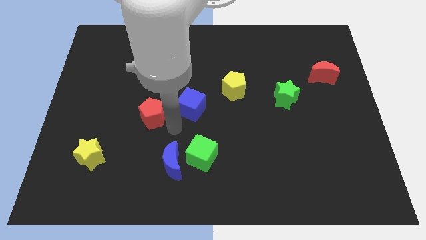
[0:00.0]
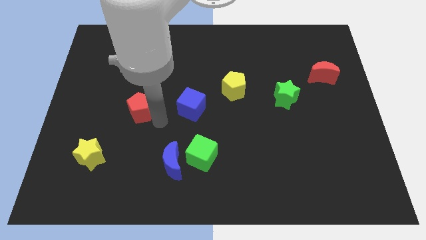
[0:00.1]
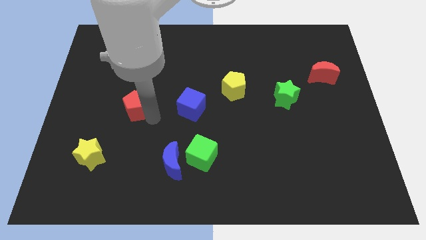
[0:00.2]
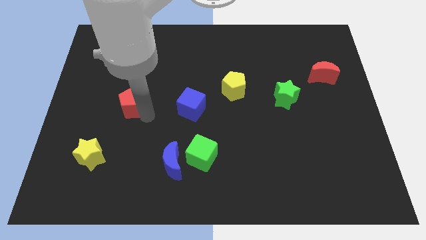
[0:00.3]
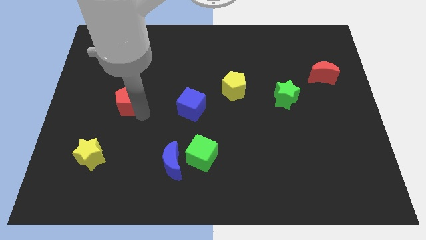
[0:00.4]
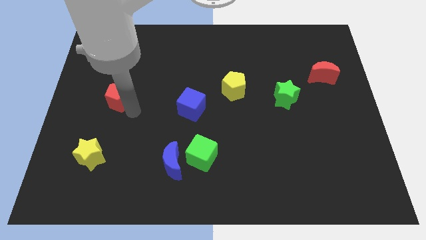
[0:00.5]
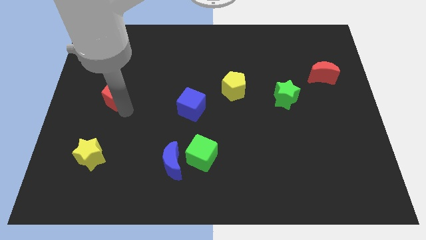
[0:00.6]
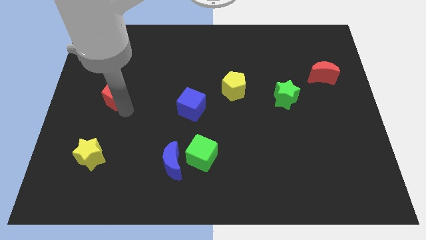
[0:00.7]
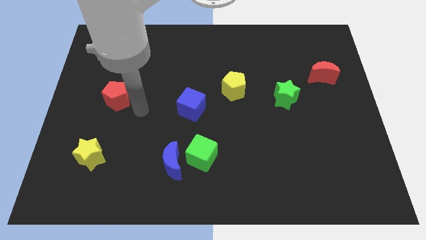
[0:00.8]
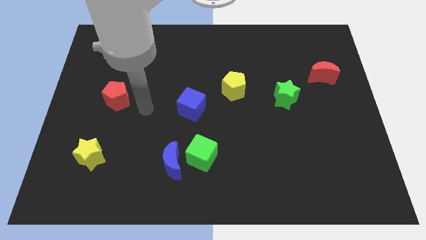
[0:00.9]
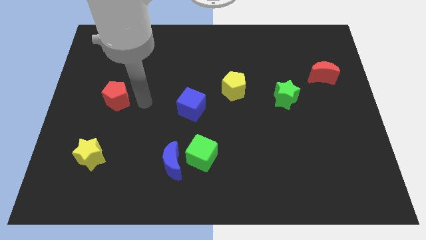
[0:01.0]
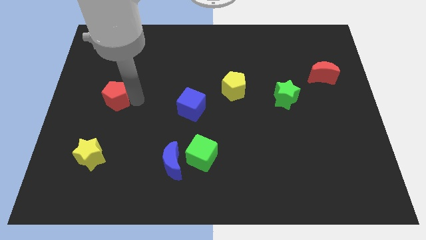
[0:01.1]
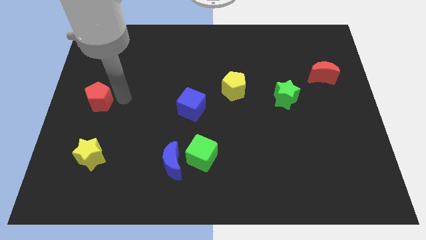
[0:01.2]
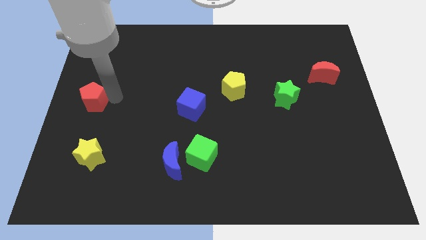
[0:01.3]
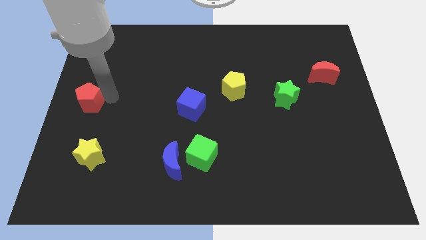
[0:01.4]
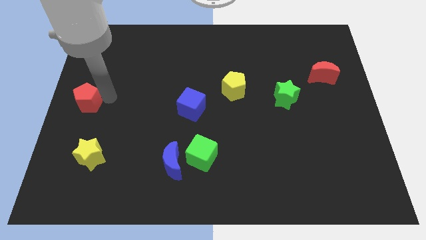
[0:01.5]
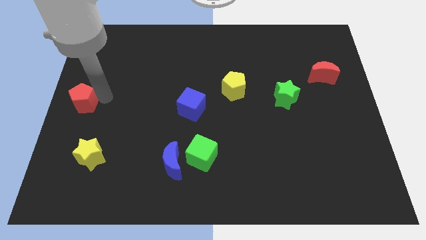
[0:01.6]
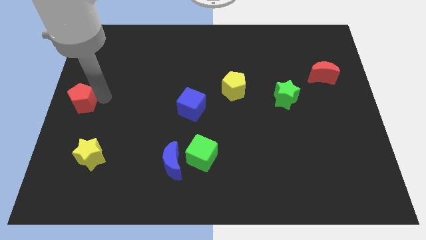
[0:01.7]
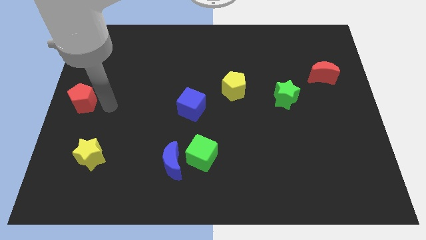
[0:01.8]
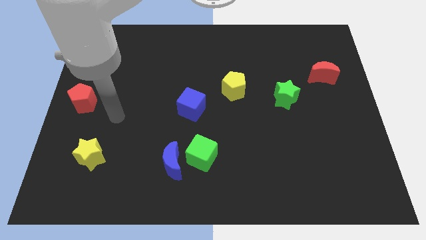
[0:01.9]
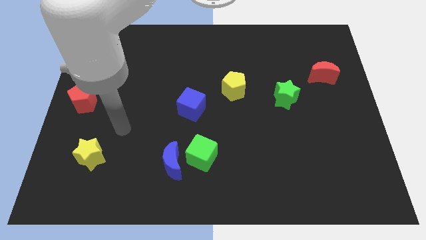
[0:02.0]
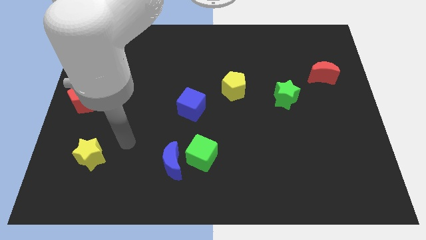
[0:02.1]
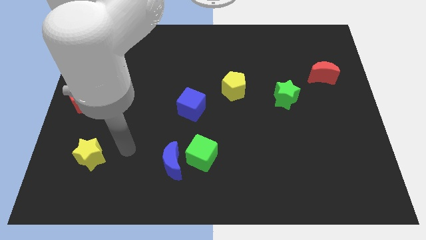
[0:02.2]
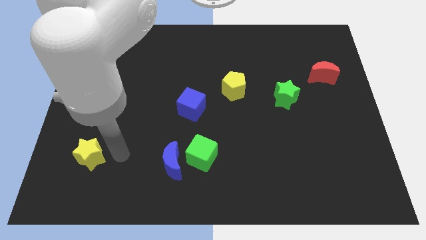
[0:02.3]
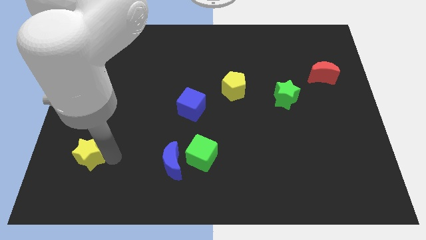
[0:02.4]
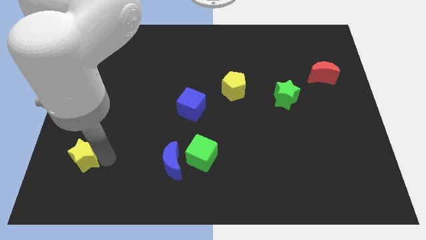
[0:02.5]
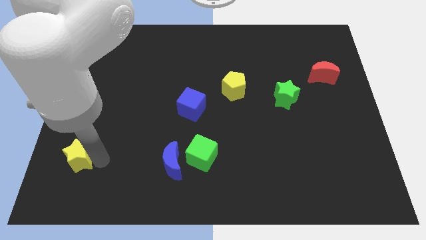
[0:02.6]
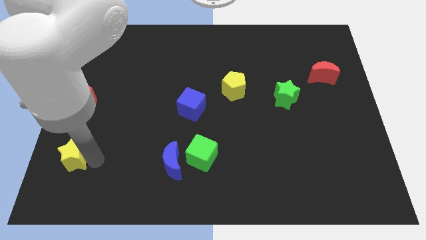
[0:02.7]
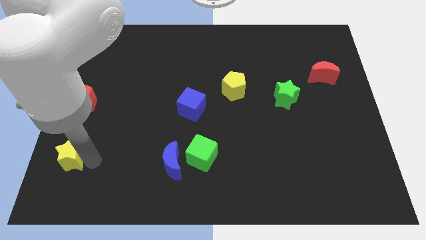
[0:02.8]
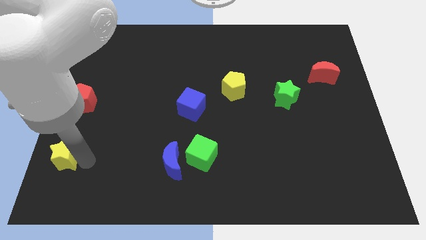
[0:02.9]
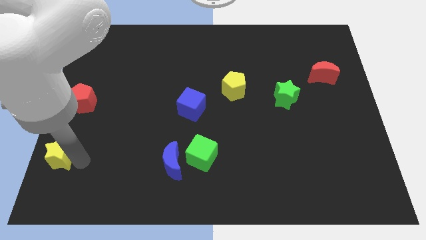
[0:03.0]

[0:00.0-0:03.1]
push the red pentagon and yellow star towards the left side of the board

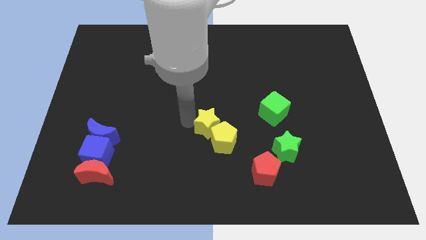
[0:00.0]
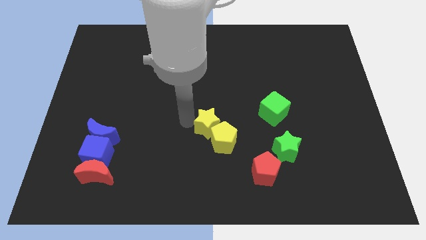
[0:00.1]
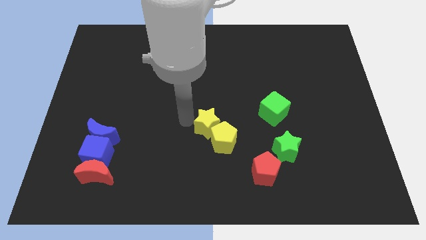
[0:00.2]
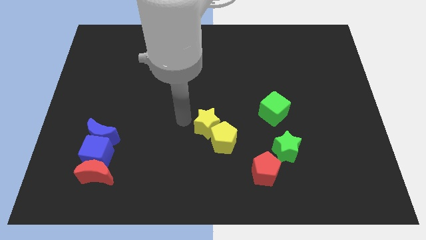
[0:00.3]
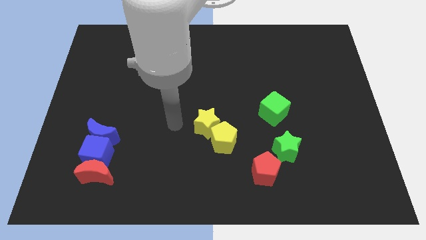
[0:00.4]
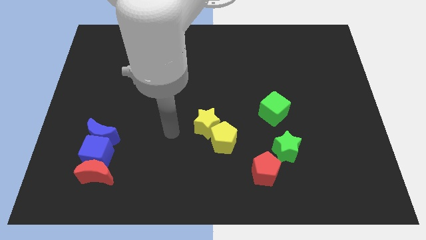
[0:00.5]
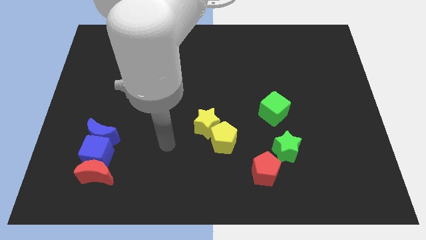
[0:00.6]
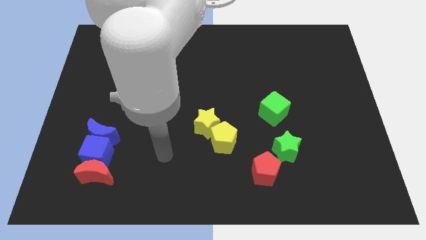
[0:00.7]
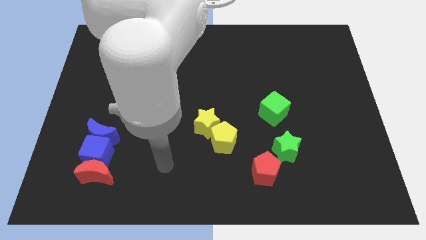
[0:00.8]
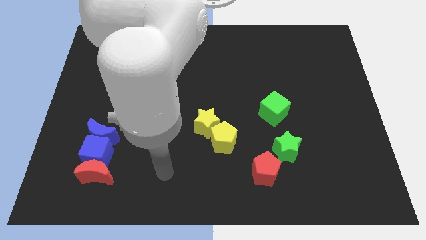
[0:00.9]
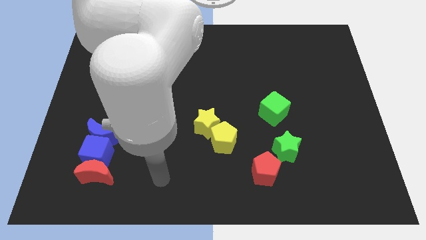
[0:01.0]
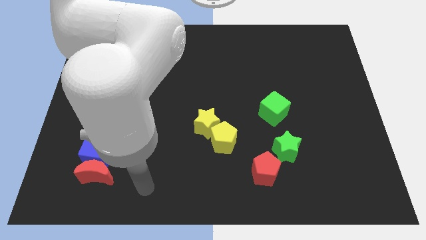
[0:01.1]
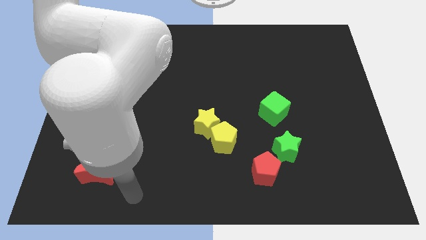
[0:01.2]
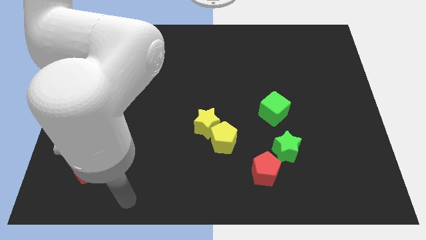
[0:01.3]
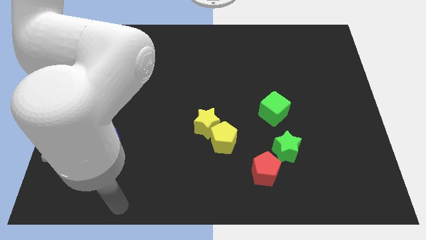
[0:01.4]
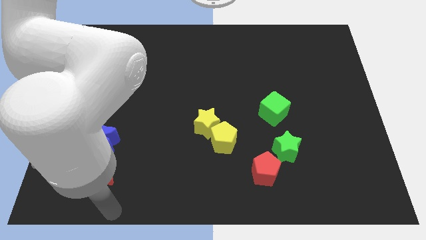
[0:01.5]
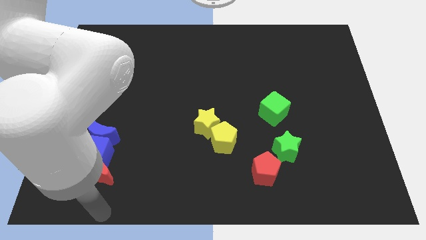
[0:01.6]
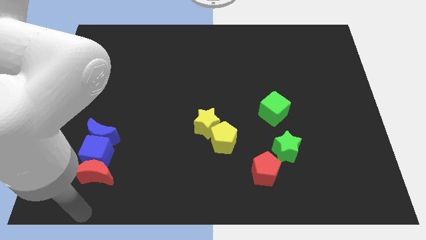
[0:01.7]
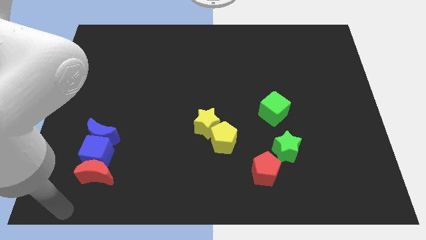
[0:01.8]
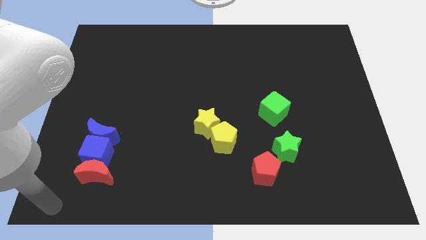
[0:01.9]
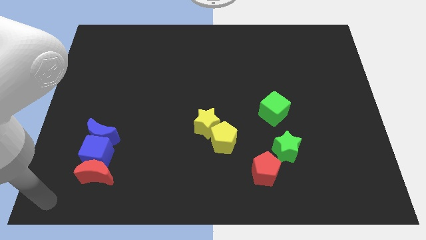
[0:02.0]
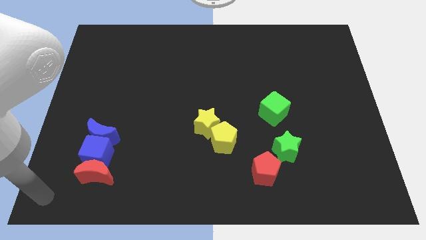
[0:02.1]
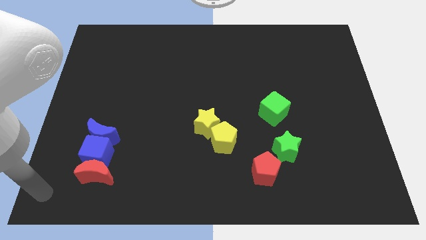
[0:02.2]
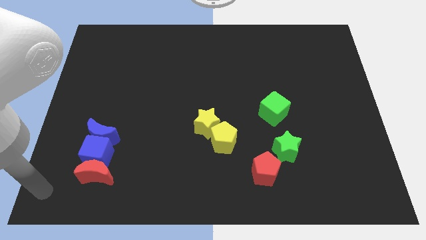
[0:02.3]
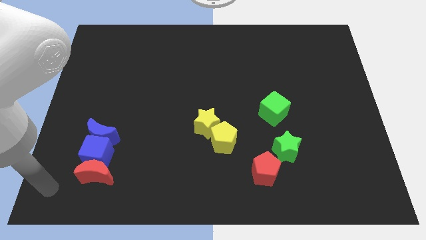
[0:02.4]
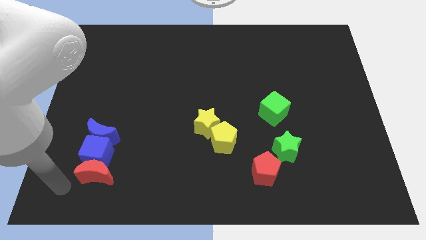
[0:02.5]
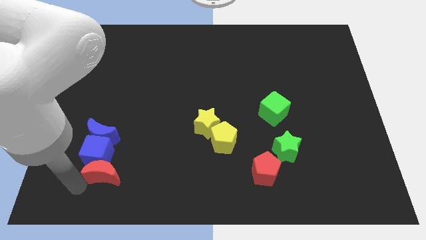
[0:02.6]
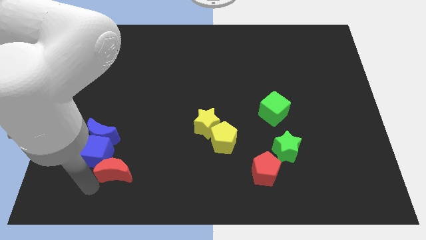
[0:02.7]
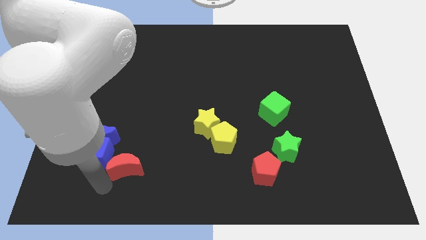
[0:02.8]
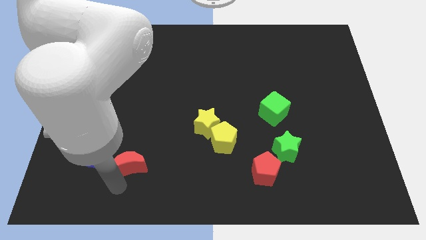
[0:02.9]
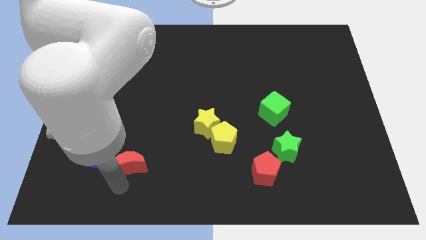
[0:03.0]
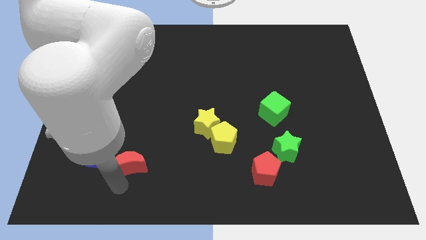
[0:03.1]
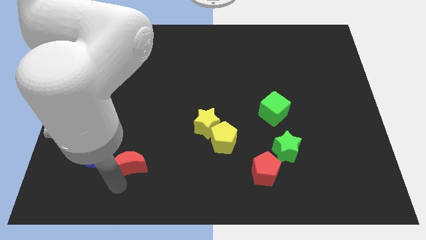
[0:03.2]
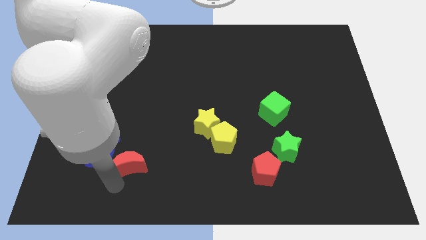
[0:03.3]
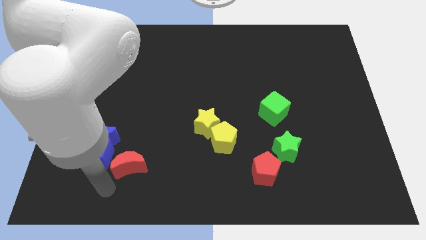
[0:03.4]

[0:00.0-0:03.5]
slide the red moon to the right of the blue cube

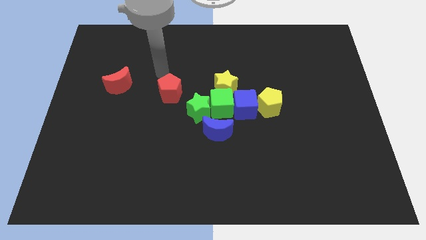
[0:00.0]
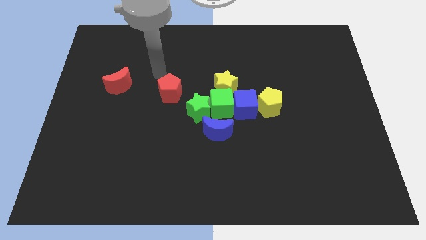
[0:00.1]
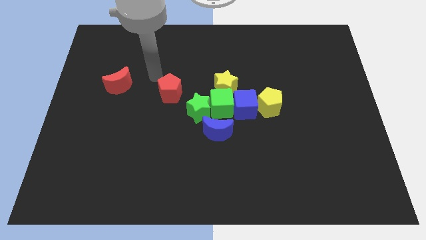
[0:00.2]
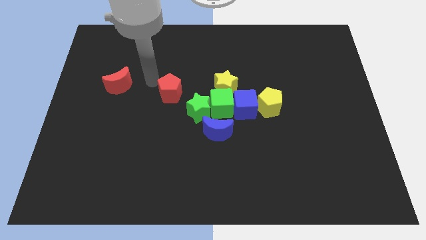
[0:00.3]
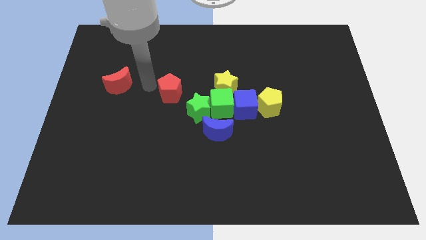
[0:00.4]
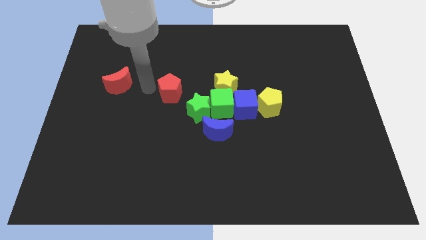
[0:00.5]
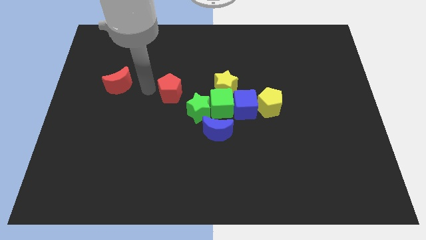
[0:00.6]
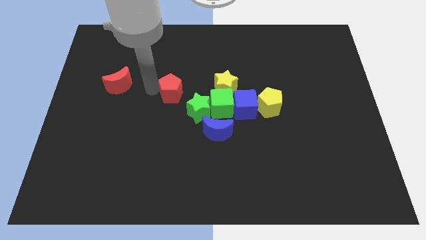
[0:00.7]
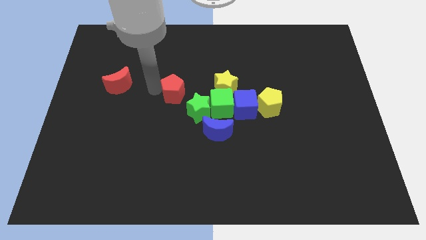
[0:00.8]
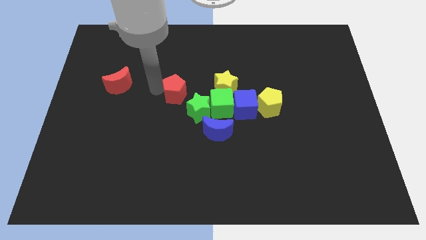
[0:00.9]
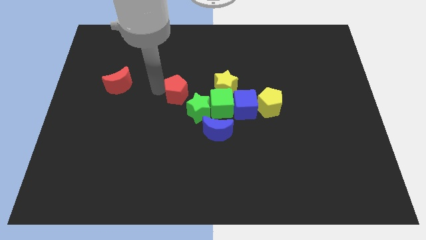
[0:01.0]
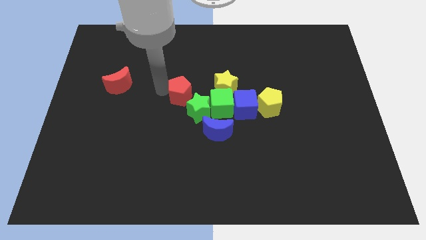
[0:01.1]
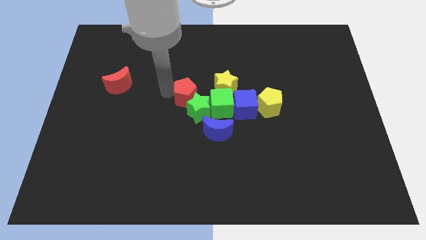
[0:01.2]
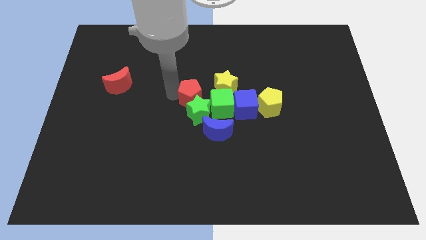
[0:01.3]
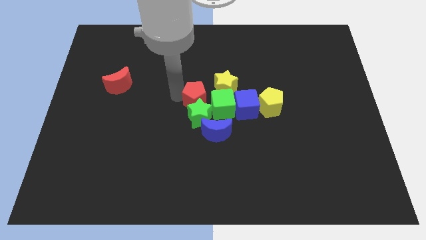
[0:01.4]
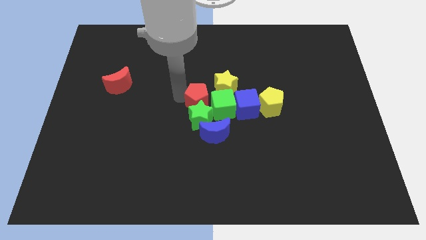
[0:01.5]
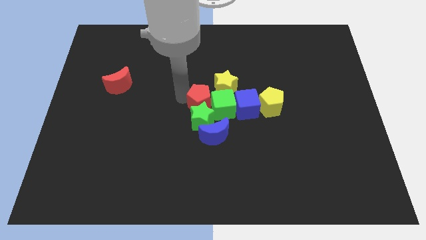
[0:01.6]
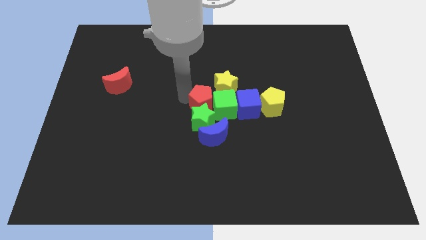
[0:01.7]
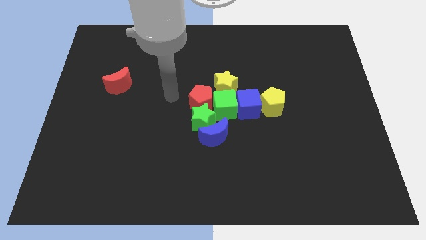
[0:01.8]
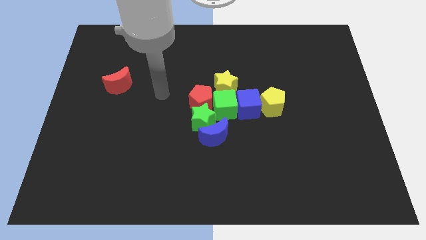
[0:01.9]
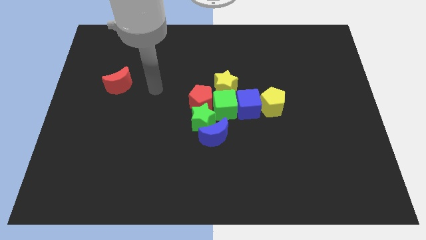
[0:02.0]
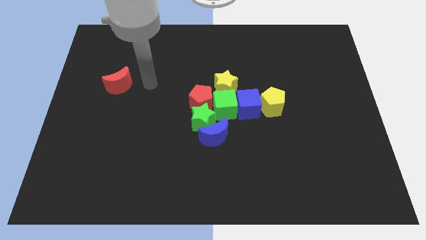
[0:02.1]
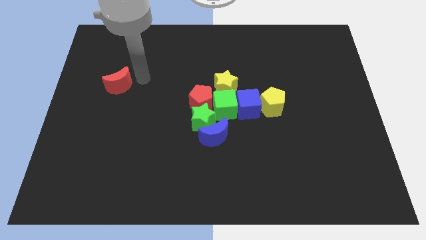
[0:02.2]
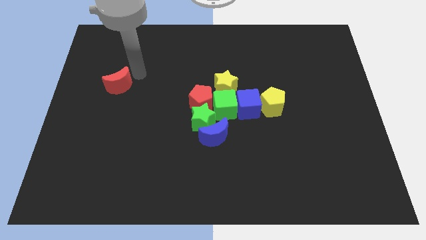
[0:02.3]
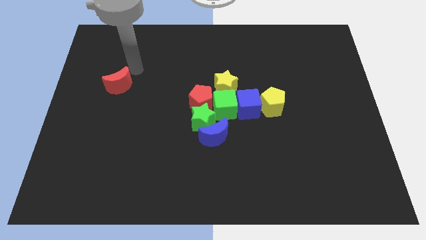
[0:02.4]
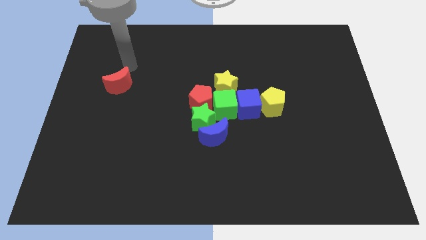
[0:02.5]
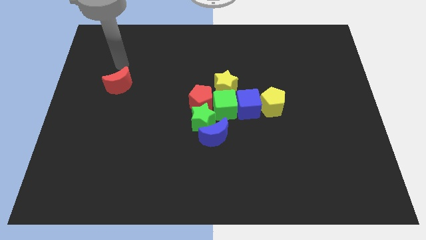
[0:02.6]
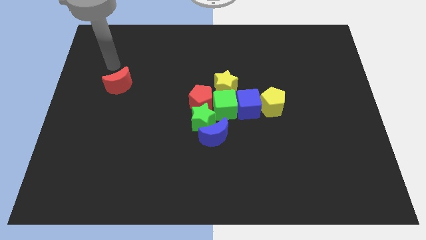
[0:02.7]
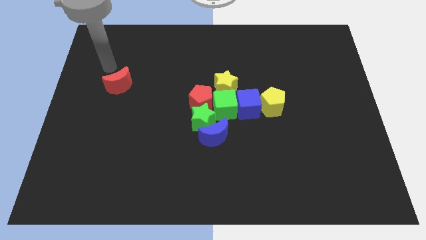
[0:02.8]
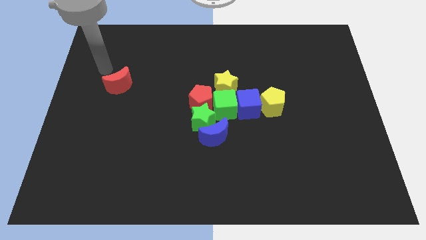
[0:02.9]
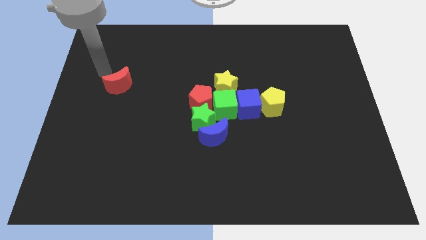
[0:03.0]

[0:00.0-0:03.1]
place red pentagon into group of blocks
